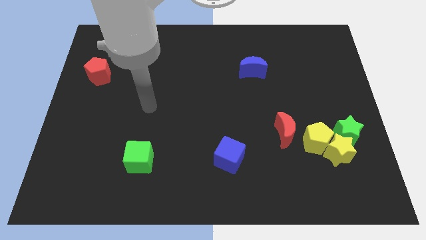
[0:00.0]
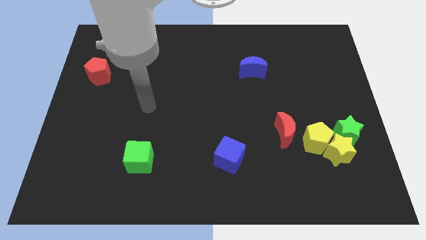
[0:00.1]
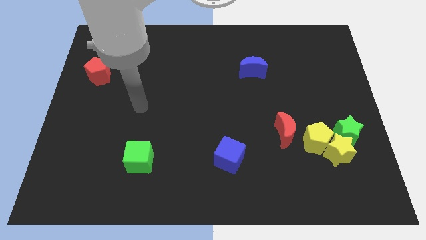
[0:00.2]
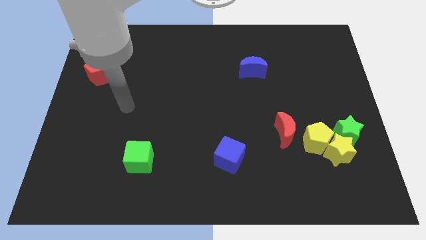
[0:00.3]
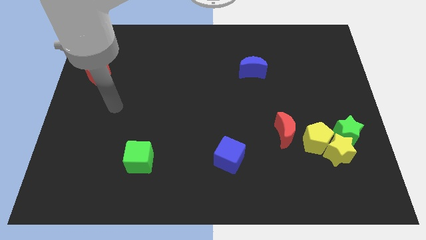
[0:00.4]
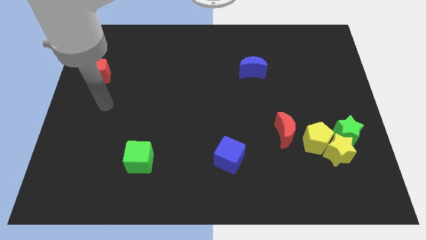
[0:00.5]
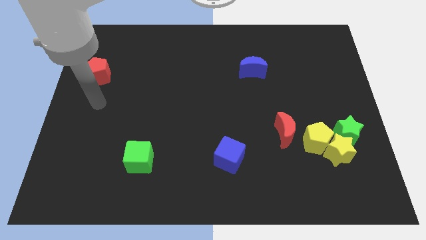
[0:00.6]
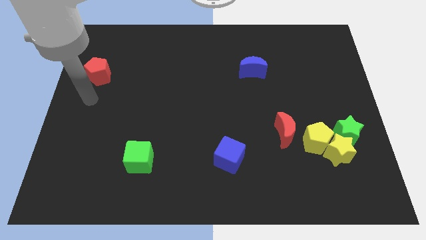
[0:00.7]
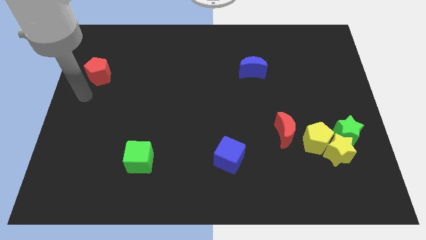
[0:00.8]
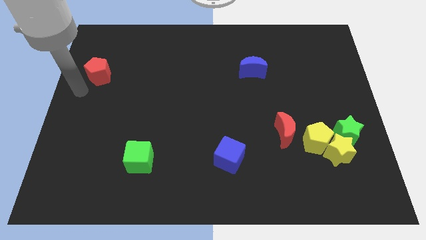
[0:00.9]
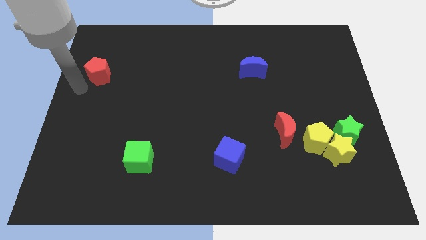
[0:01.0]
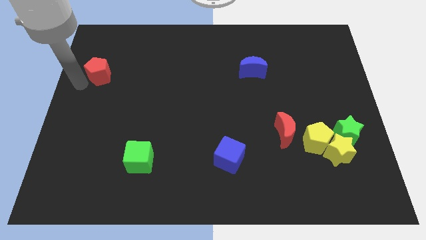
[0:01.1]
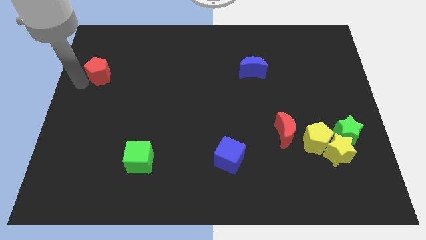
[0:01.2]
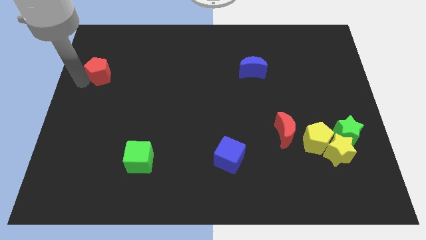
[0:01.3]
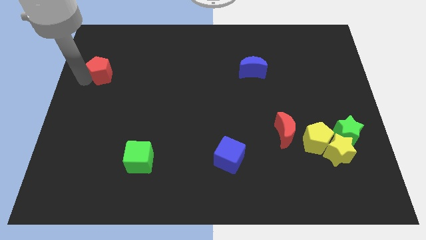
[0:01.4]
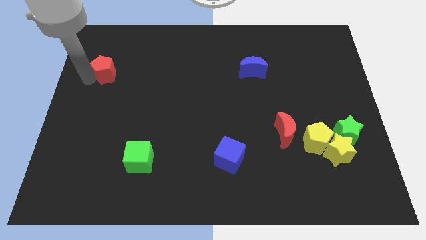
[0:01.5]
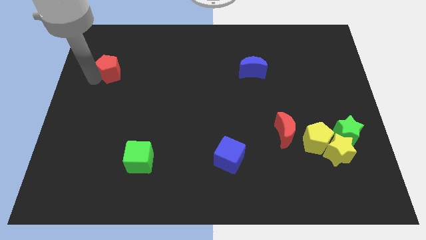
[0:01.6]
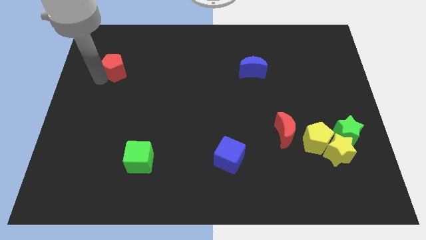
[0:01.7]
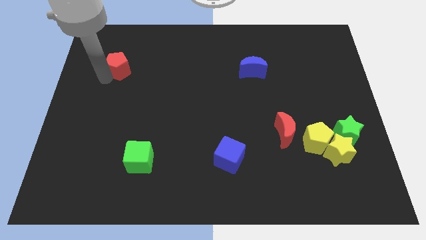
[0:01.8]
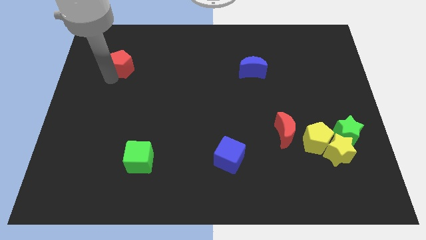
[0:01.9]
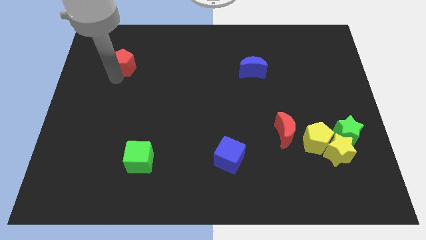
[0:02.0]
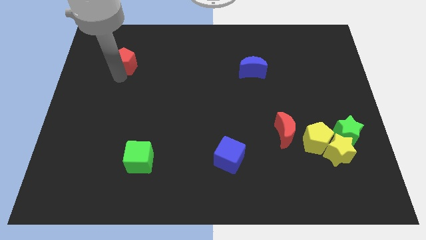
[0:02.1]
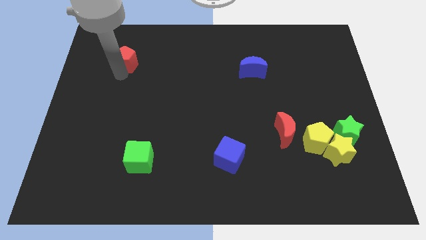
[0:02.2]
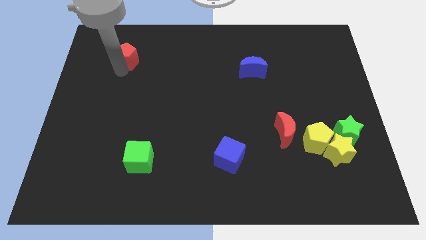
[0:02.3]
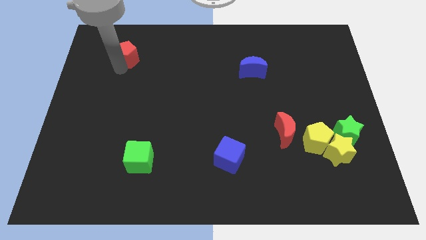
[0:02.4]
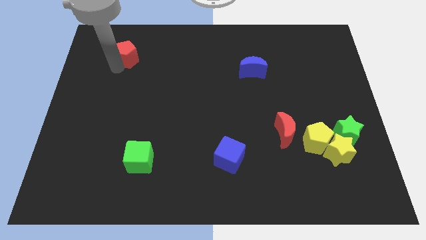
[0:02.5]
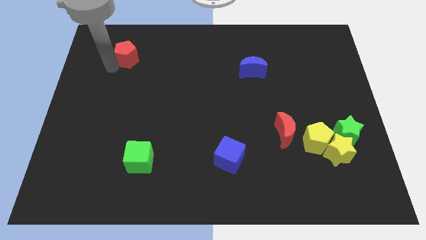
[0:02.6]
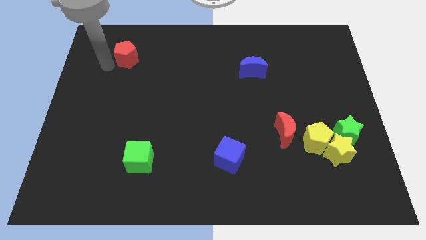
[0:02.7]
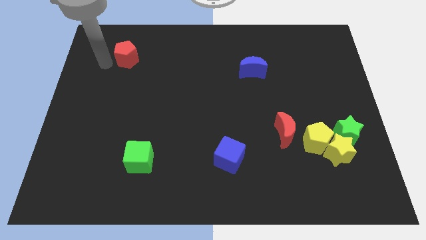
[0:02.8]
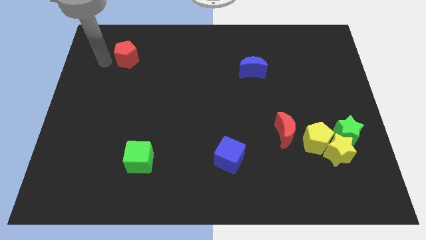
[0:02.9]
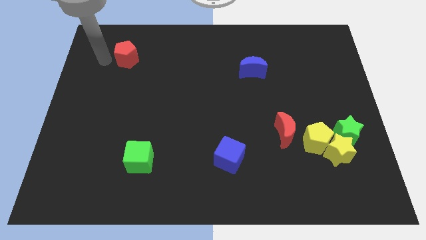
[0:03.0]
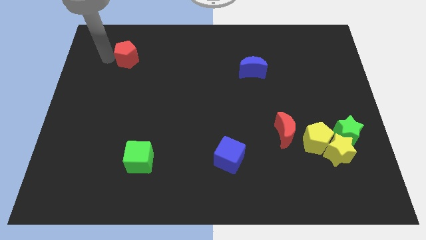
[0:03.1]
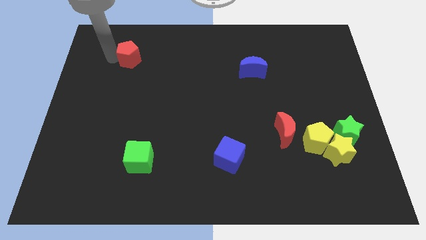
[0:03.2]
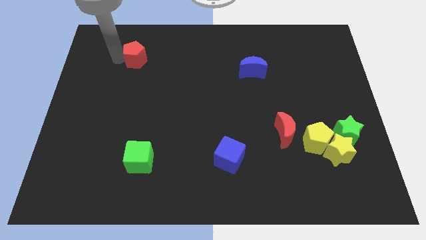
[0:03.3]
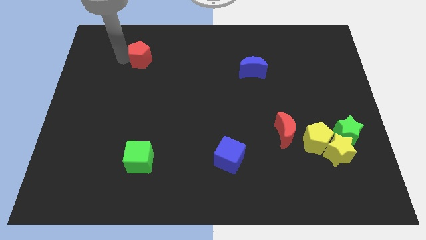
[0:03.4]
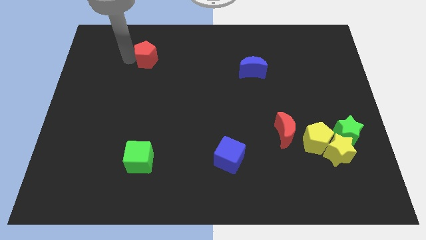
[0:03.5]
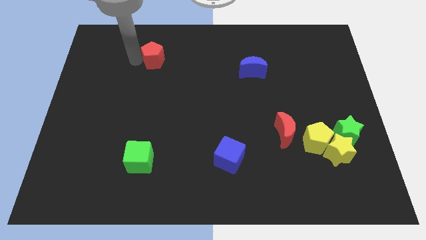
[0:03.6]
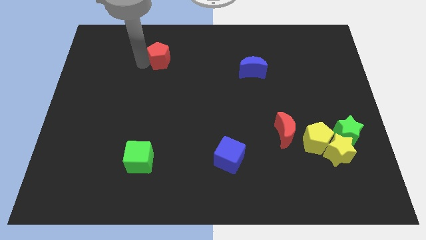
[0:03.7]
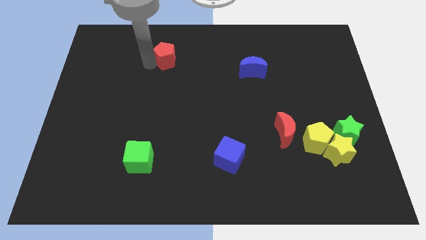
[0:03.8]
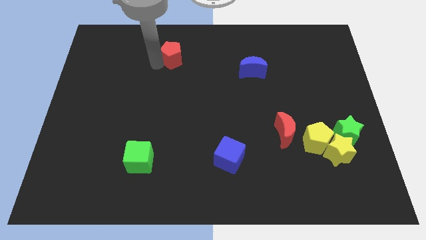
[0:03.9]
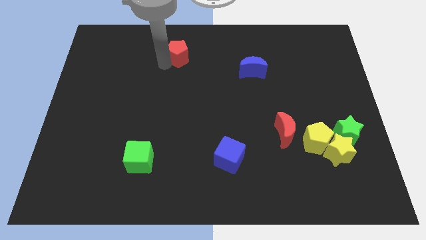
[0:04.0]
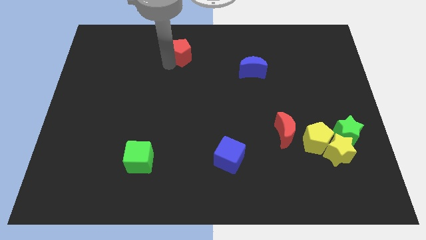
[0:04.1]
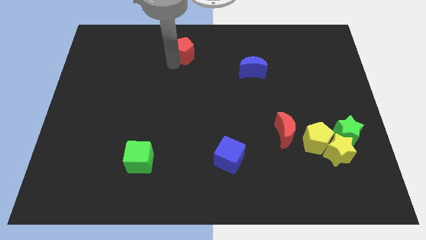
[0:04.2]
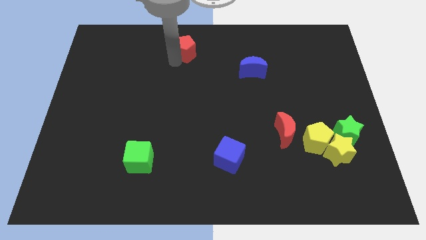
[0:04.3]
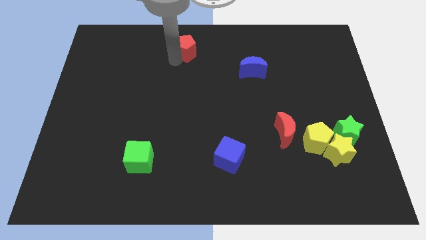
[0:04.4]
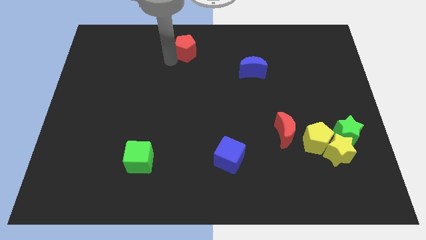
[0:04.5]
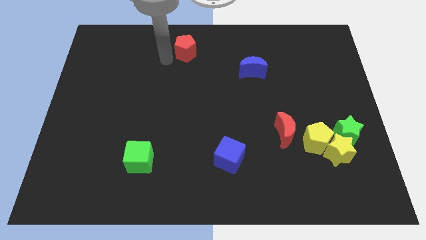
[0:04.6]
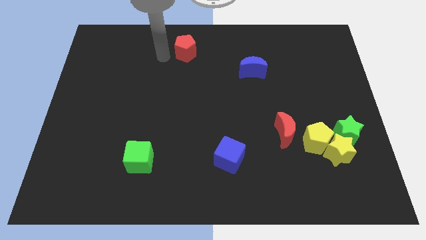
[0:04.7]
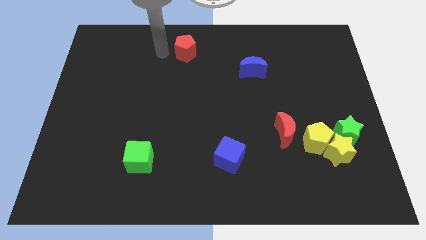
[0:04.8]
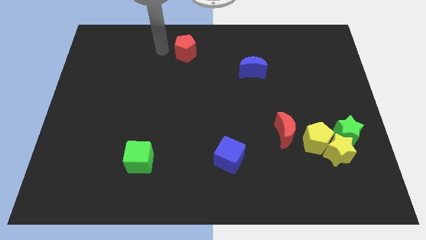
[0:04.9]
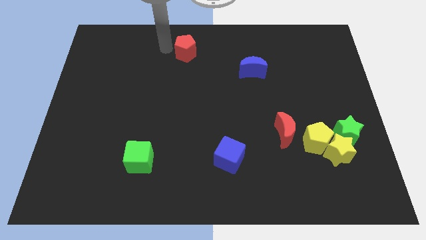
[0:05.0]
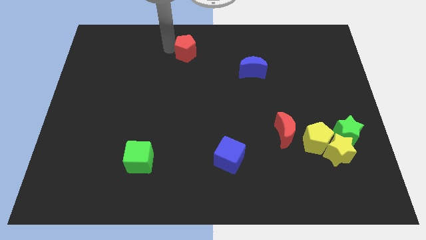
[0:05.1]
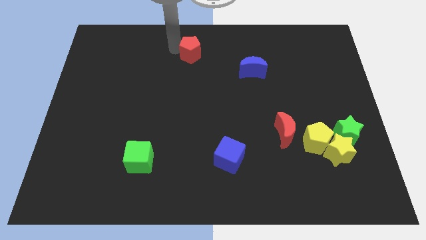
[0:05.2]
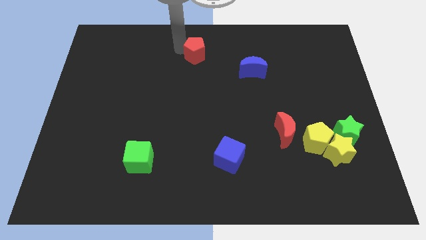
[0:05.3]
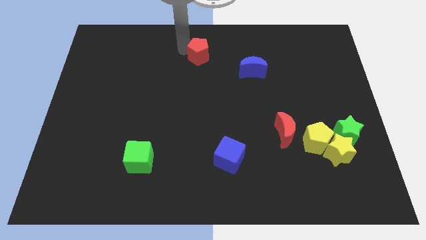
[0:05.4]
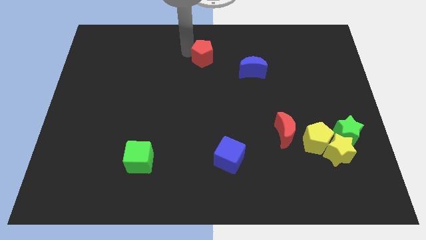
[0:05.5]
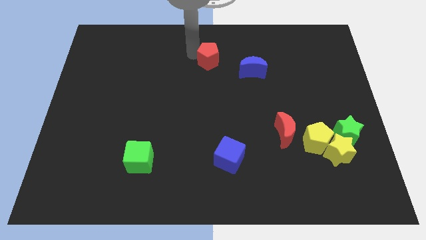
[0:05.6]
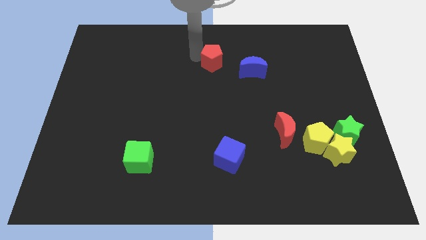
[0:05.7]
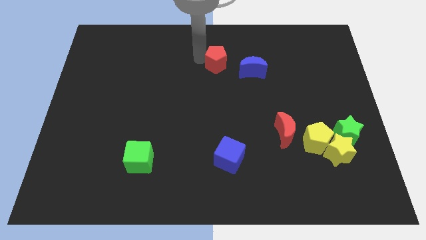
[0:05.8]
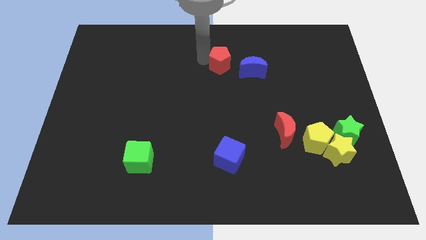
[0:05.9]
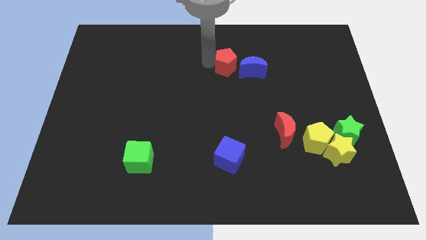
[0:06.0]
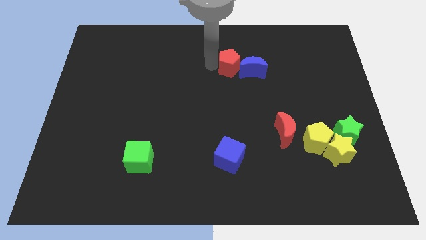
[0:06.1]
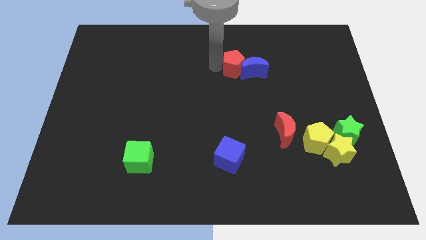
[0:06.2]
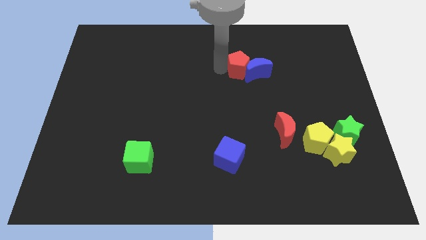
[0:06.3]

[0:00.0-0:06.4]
move the red pentagon to the blue moon

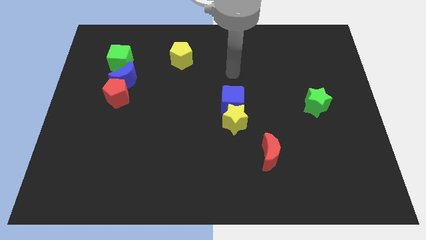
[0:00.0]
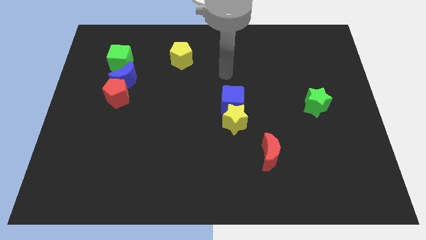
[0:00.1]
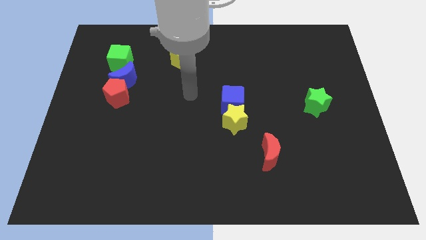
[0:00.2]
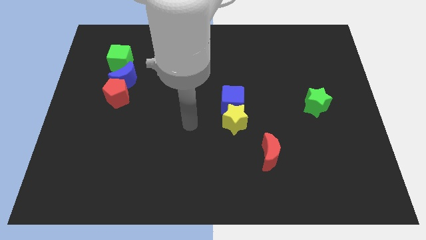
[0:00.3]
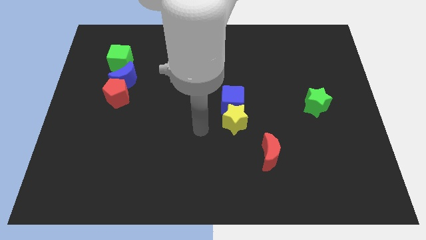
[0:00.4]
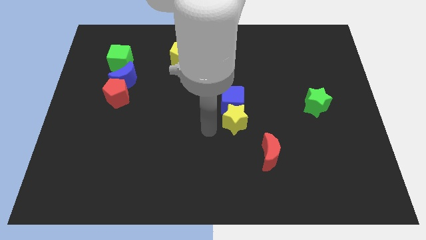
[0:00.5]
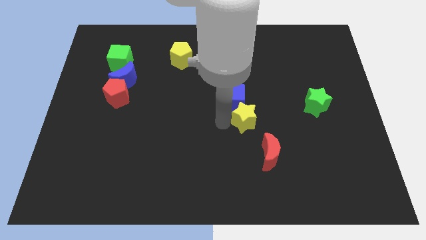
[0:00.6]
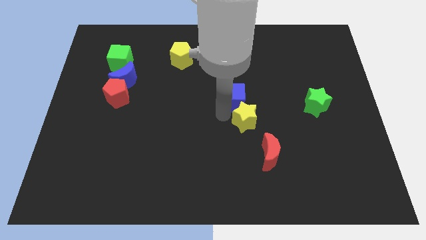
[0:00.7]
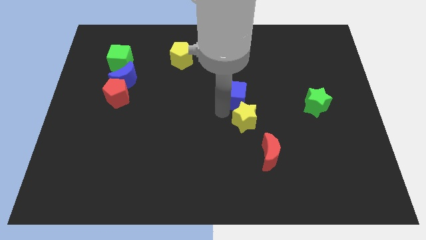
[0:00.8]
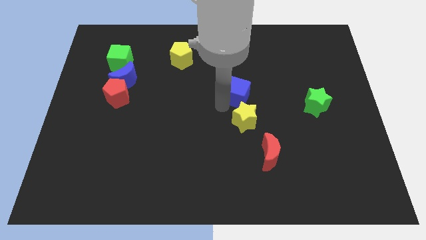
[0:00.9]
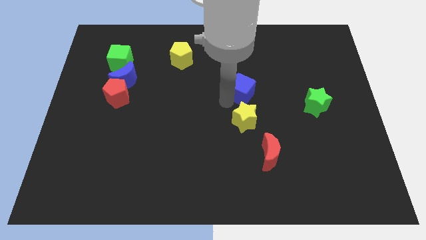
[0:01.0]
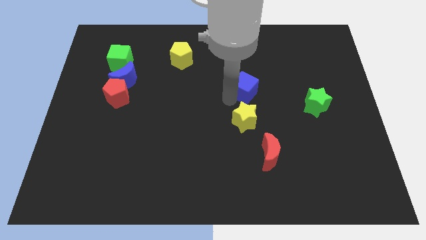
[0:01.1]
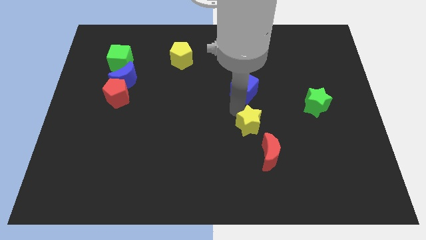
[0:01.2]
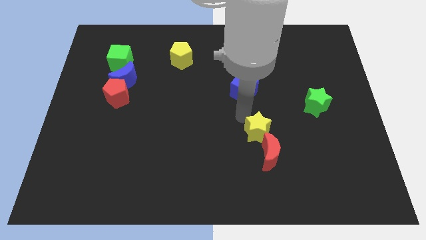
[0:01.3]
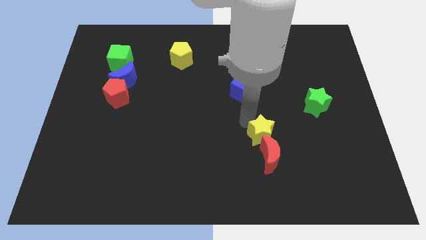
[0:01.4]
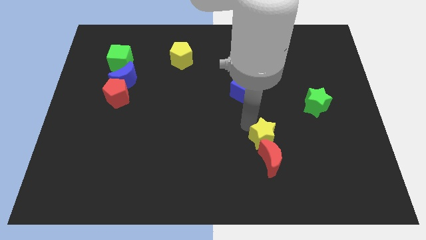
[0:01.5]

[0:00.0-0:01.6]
push the yellow star next to the red moon

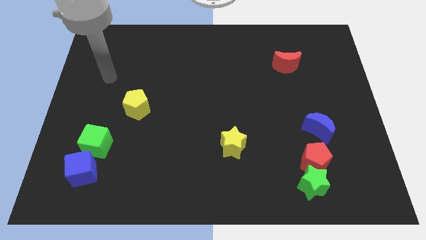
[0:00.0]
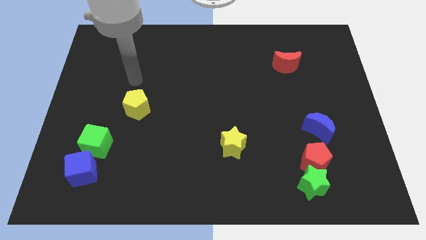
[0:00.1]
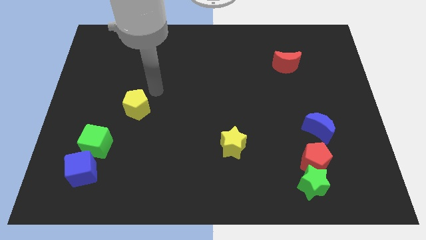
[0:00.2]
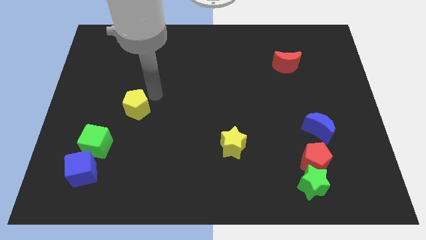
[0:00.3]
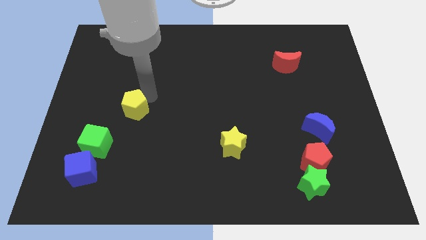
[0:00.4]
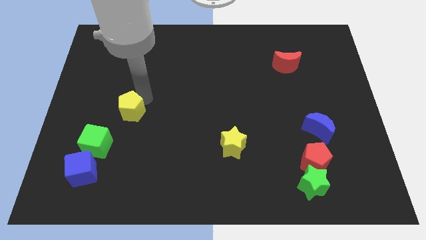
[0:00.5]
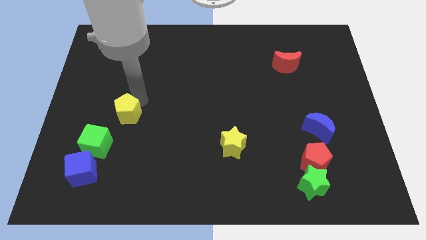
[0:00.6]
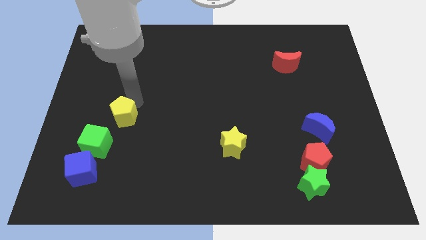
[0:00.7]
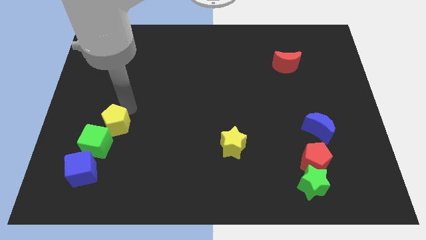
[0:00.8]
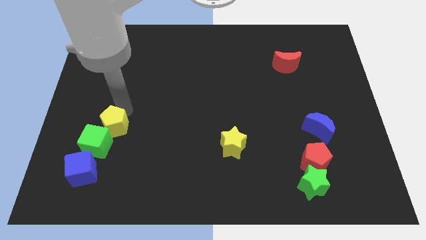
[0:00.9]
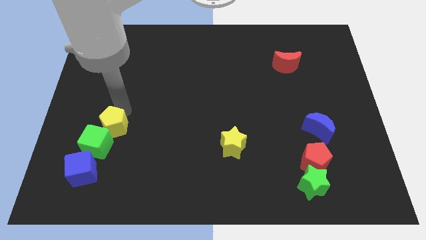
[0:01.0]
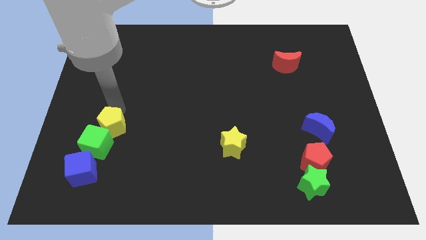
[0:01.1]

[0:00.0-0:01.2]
put the yellow pentagon to the green cube
